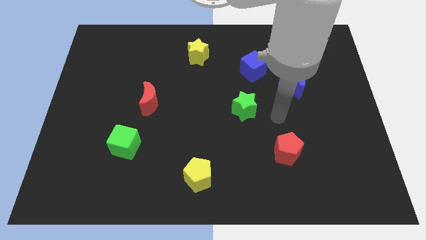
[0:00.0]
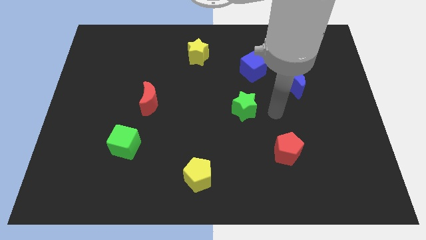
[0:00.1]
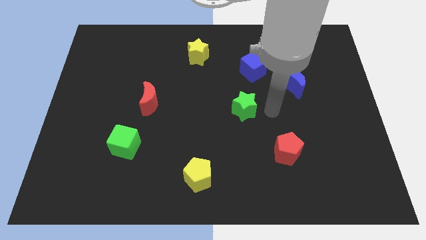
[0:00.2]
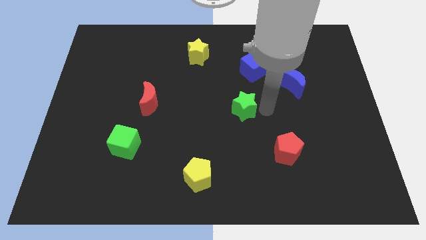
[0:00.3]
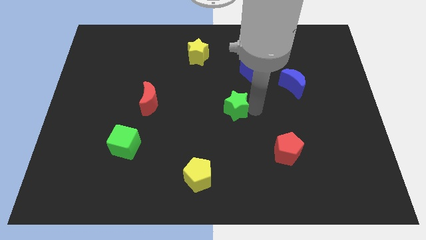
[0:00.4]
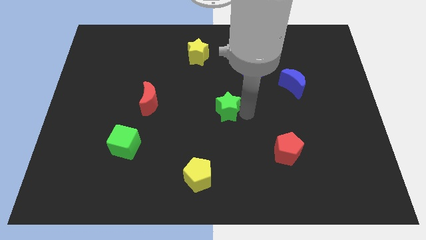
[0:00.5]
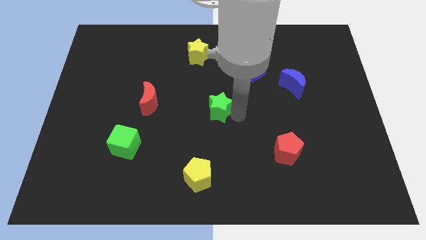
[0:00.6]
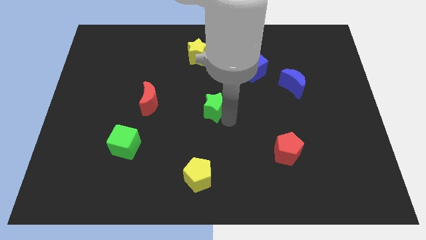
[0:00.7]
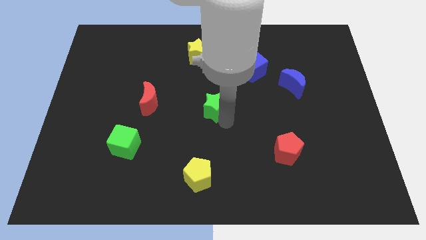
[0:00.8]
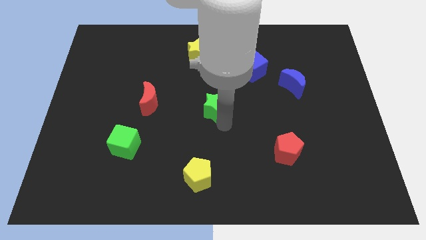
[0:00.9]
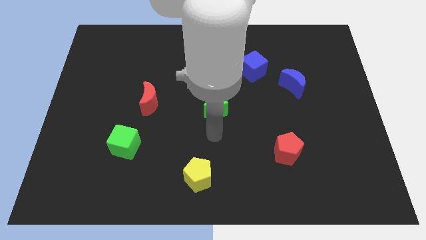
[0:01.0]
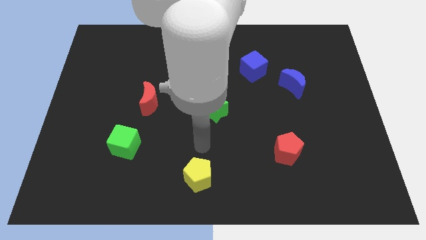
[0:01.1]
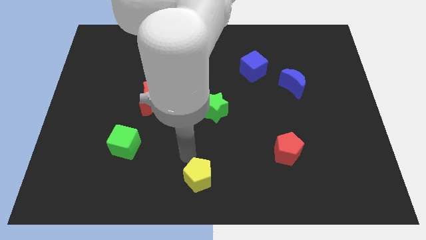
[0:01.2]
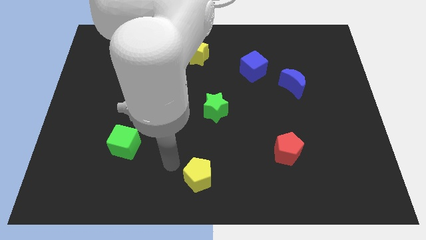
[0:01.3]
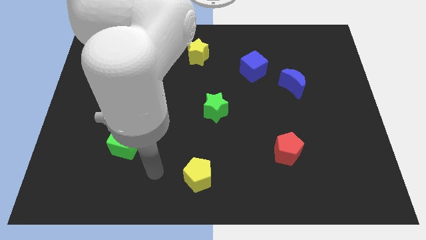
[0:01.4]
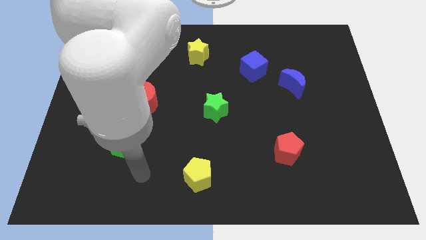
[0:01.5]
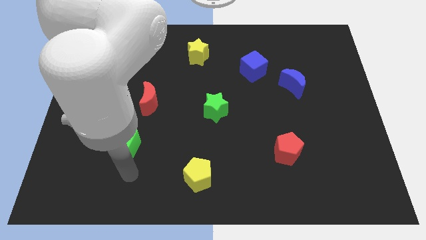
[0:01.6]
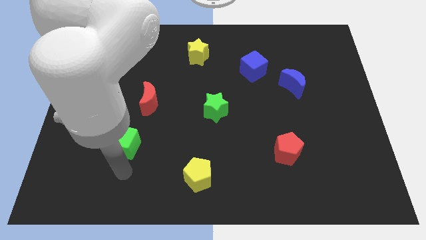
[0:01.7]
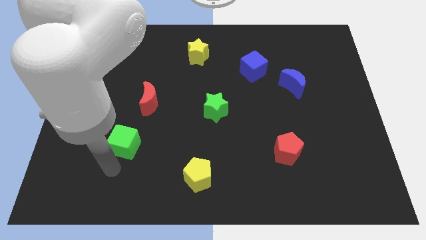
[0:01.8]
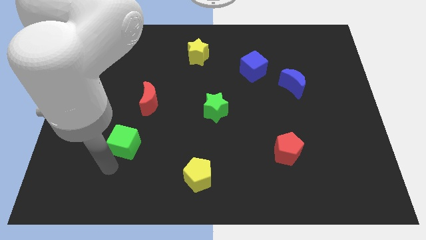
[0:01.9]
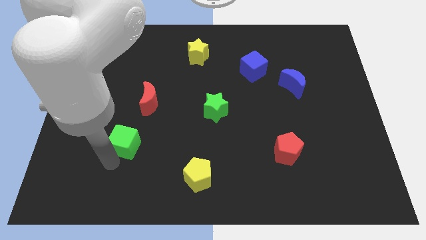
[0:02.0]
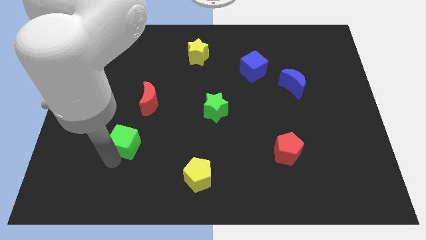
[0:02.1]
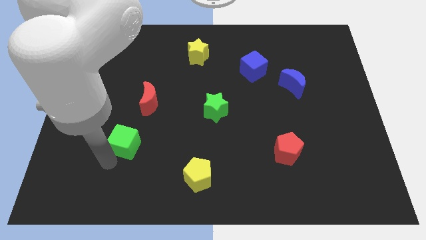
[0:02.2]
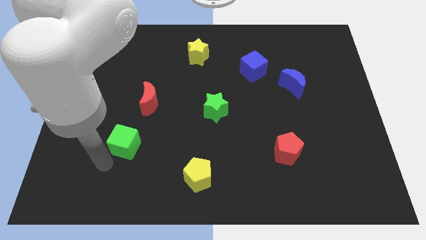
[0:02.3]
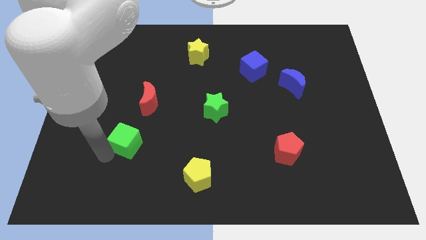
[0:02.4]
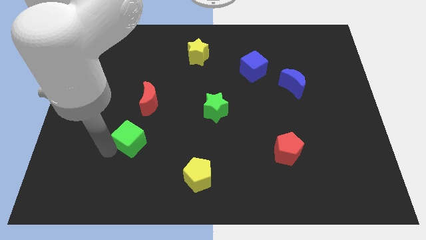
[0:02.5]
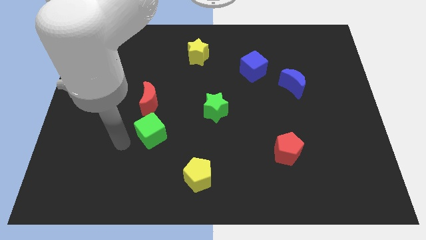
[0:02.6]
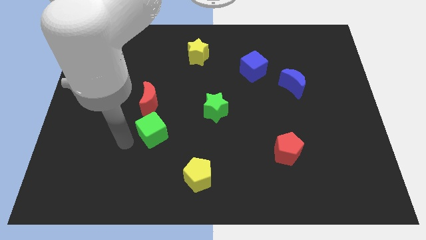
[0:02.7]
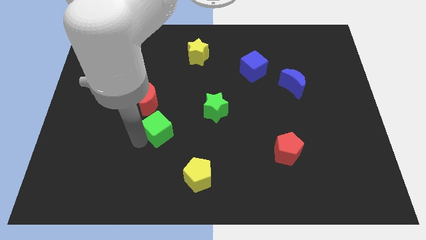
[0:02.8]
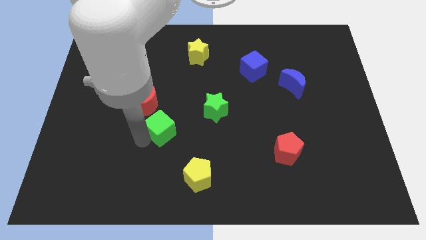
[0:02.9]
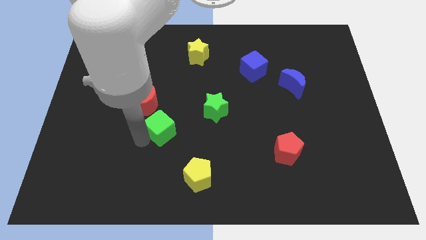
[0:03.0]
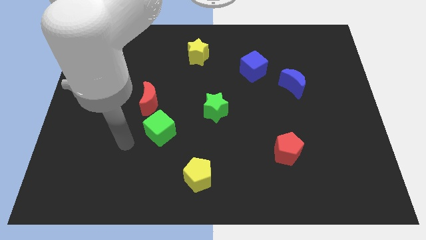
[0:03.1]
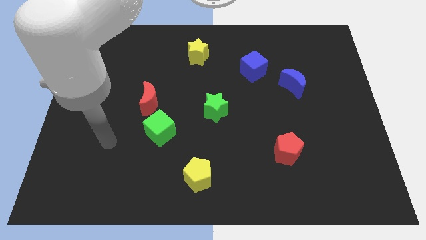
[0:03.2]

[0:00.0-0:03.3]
push the green star and the green cube close to each other

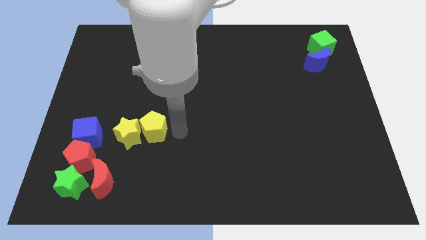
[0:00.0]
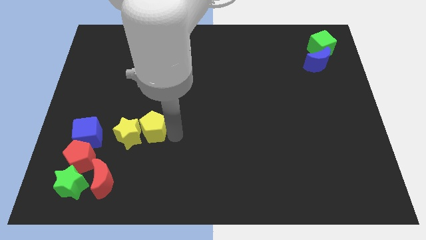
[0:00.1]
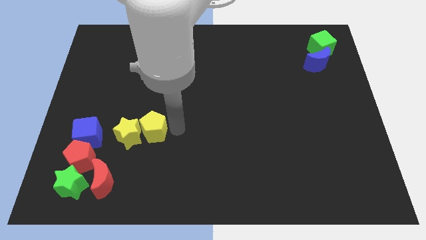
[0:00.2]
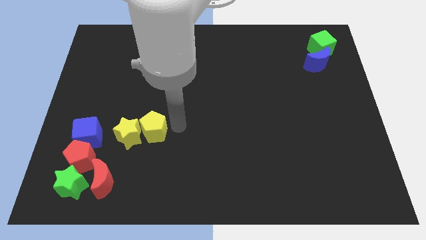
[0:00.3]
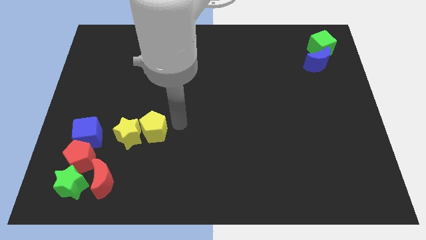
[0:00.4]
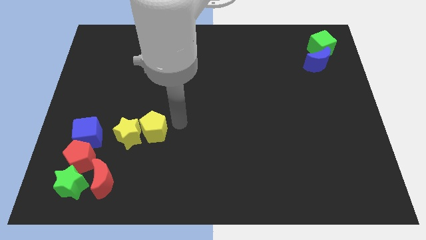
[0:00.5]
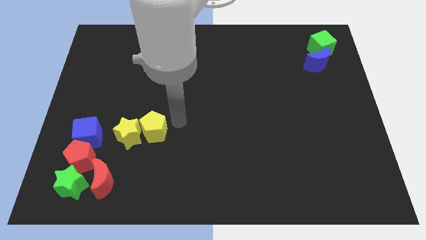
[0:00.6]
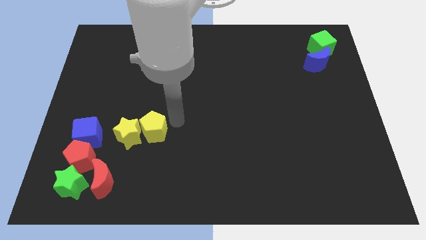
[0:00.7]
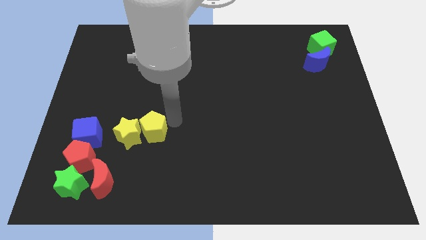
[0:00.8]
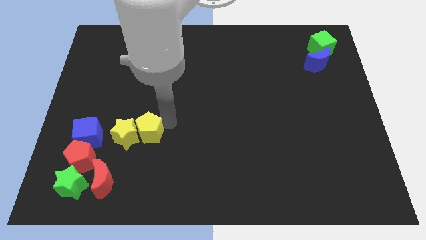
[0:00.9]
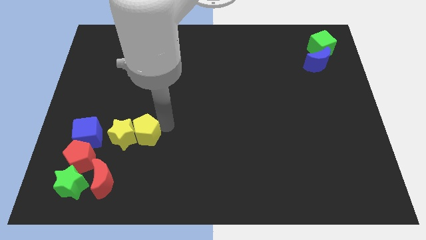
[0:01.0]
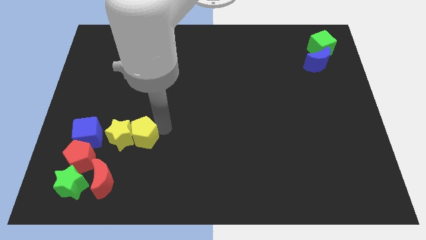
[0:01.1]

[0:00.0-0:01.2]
push the yellow pentagon into the yellow star

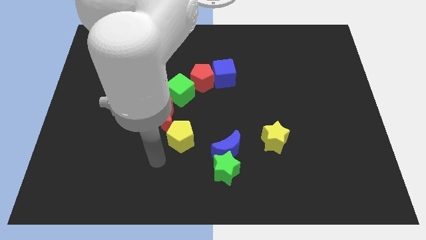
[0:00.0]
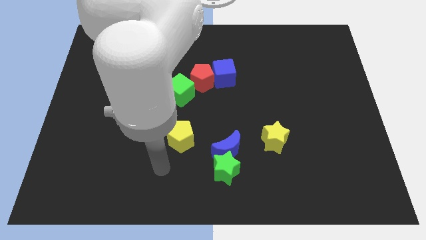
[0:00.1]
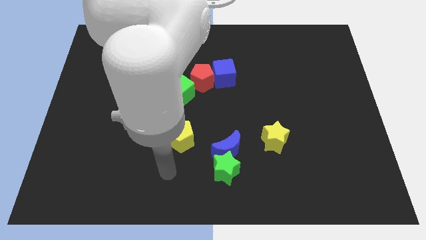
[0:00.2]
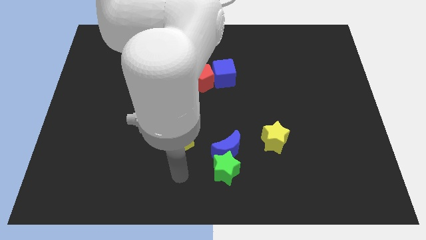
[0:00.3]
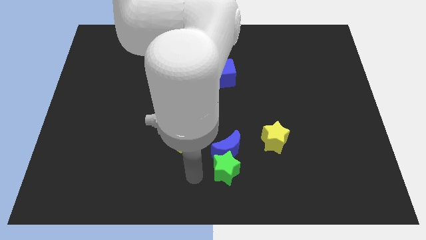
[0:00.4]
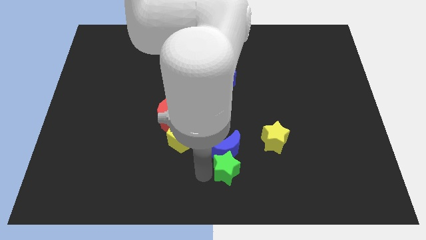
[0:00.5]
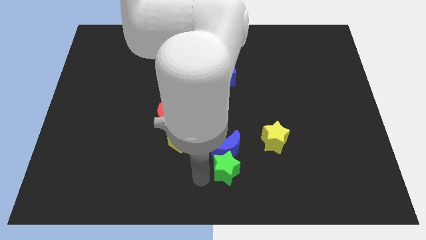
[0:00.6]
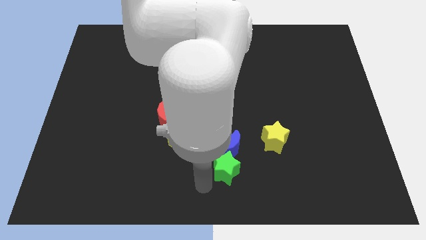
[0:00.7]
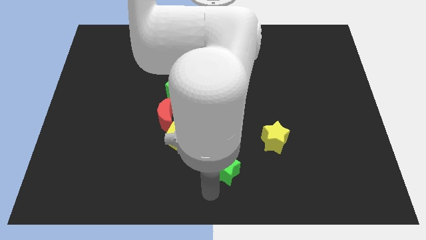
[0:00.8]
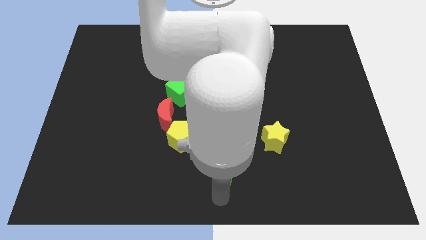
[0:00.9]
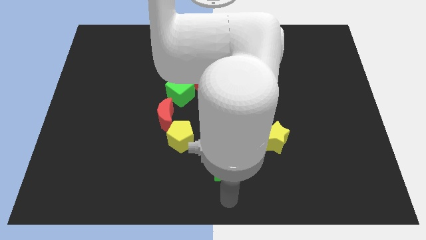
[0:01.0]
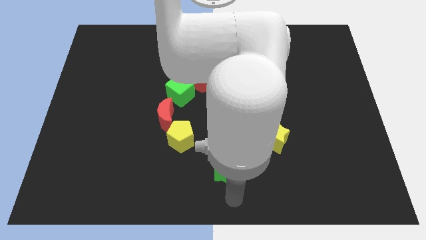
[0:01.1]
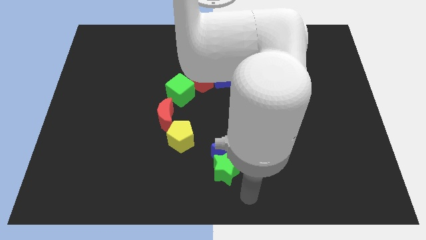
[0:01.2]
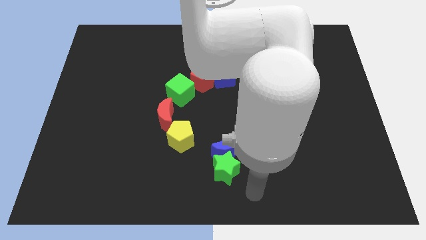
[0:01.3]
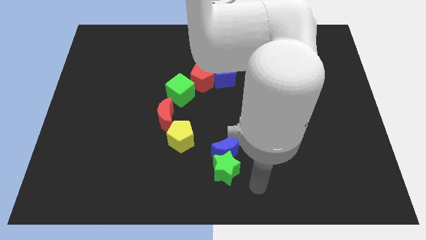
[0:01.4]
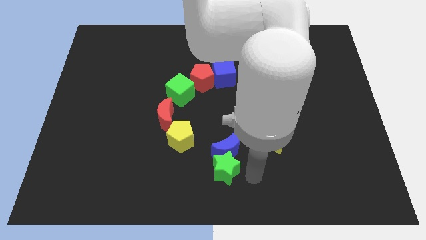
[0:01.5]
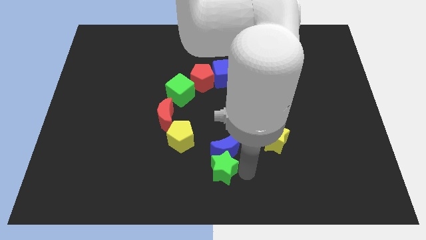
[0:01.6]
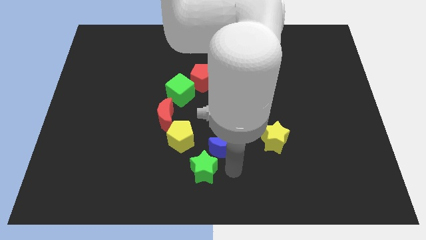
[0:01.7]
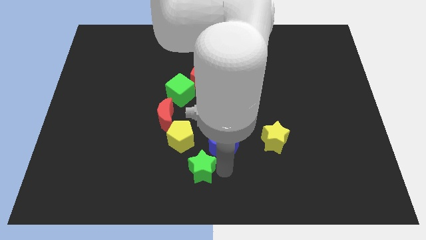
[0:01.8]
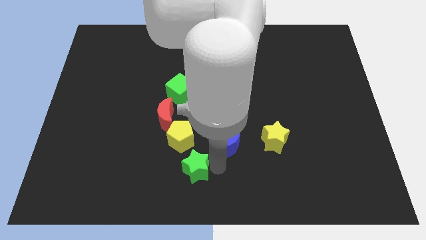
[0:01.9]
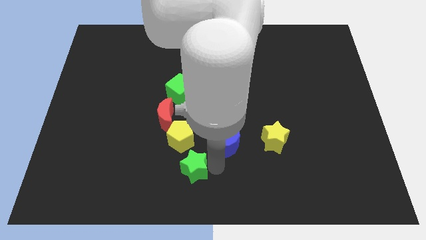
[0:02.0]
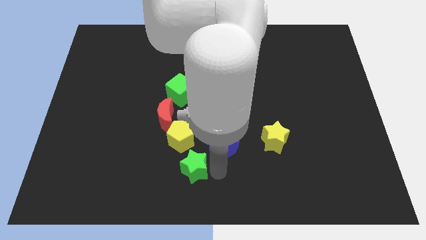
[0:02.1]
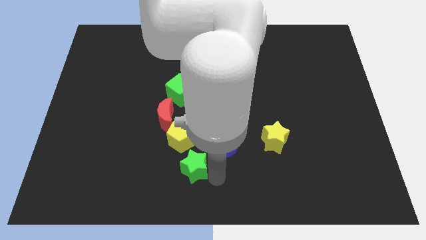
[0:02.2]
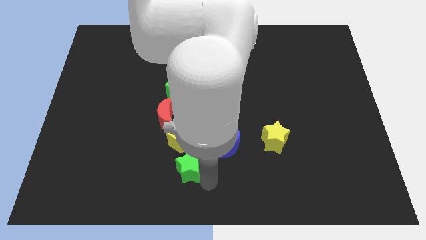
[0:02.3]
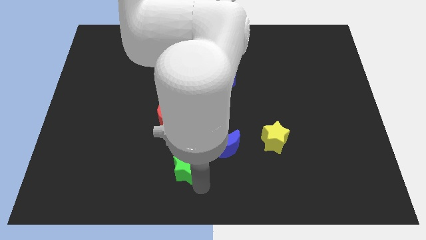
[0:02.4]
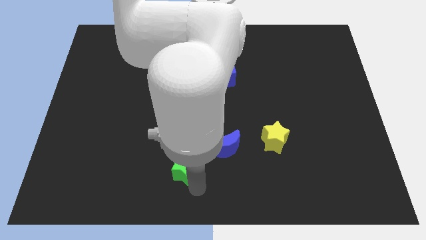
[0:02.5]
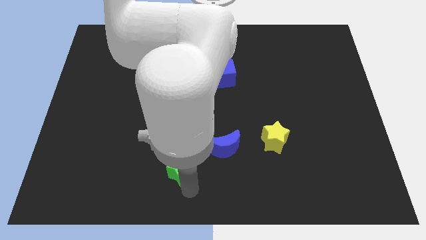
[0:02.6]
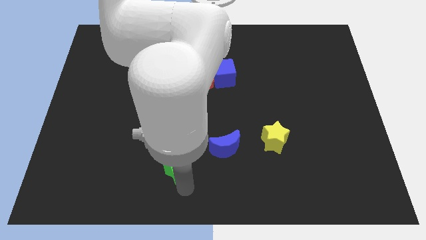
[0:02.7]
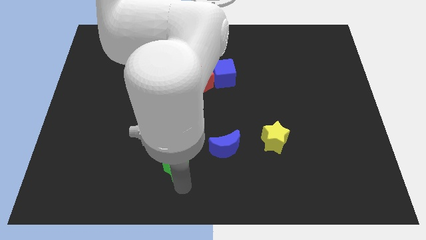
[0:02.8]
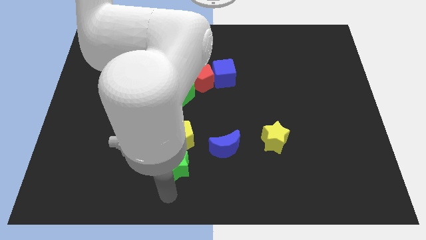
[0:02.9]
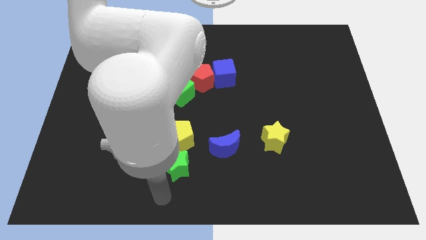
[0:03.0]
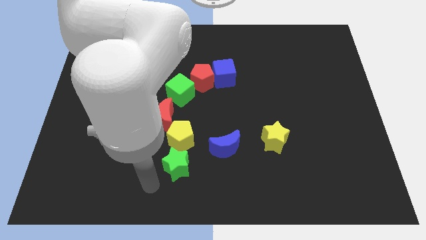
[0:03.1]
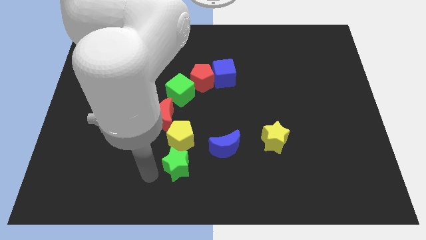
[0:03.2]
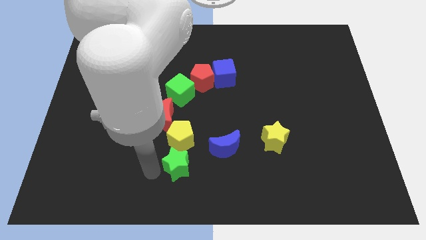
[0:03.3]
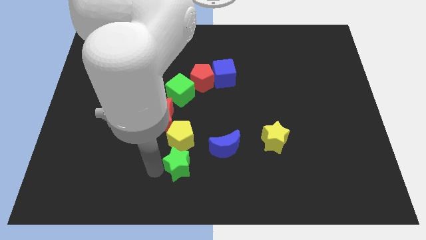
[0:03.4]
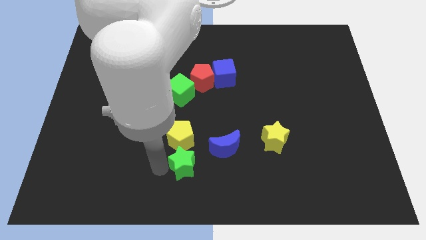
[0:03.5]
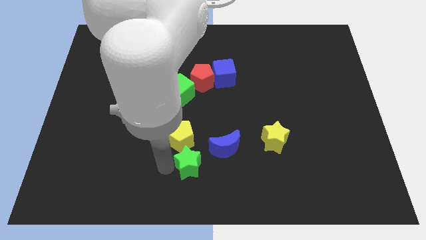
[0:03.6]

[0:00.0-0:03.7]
separate the green star from the blue moon

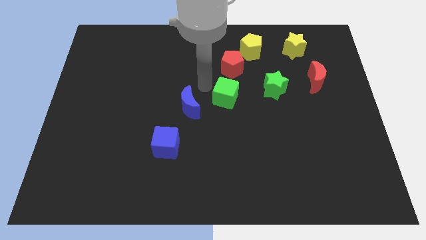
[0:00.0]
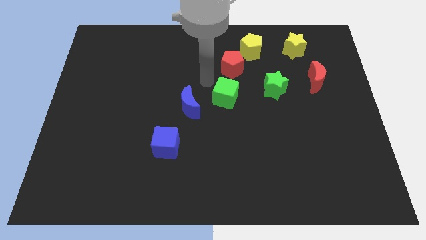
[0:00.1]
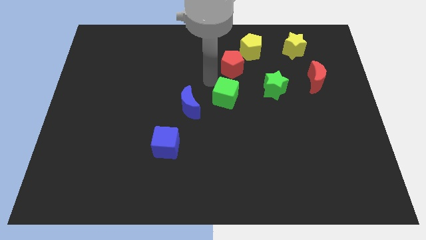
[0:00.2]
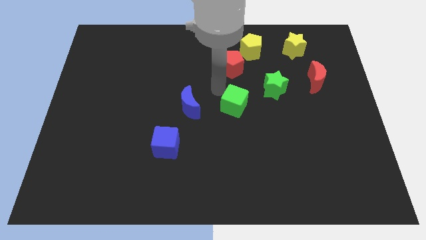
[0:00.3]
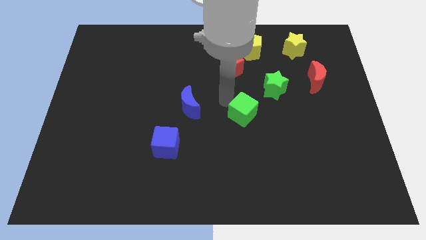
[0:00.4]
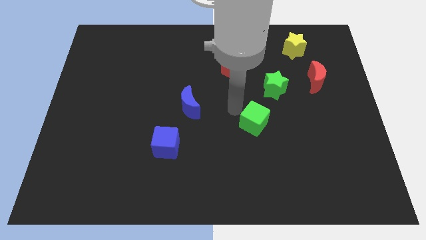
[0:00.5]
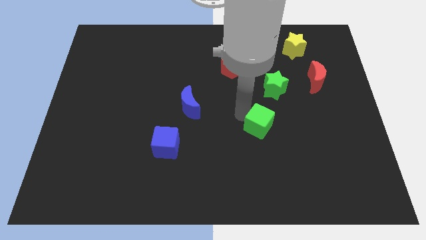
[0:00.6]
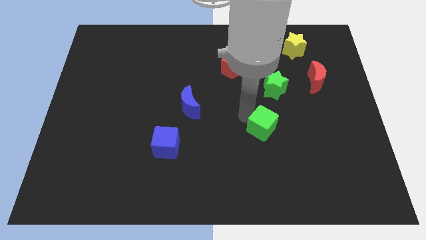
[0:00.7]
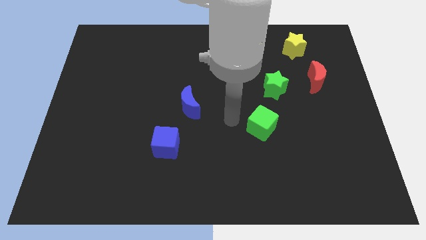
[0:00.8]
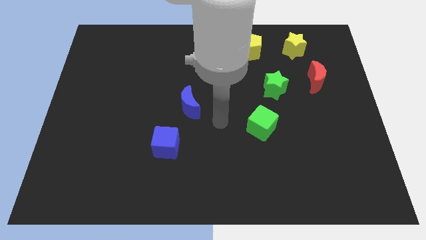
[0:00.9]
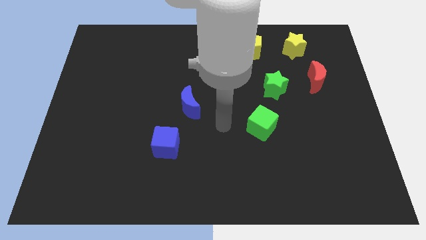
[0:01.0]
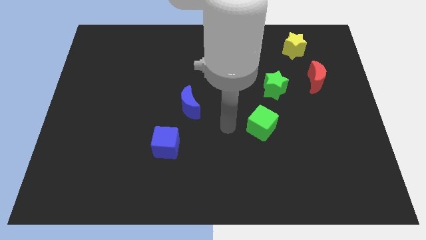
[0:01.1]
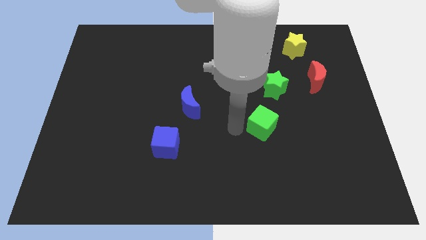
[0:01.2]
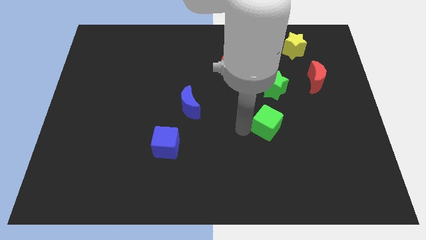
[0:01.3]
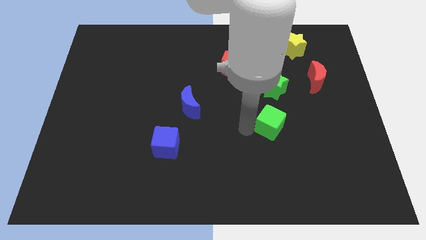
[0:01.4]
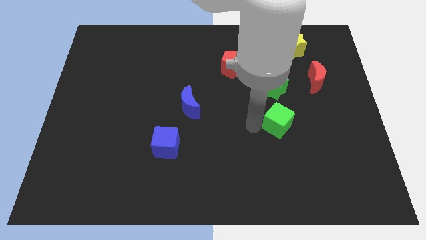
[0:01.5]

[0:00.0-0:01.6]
move the green cube below the green star
